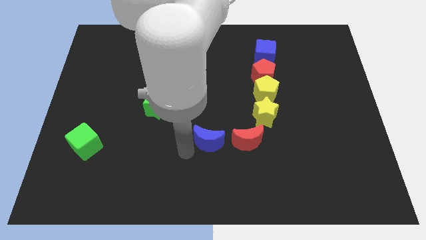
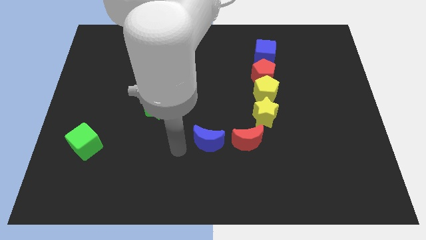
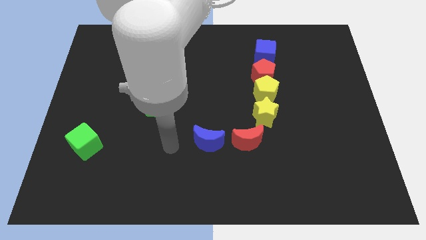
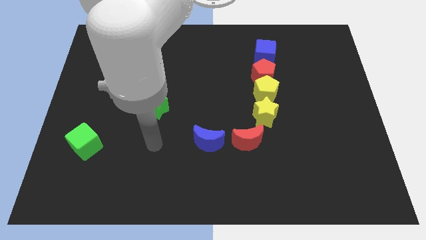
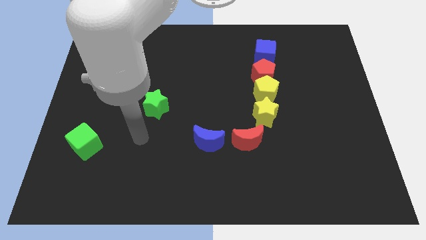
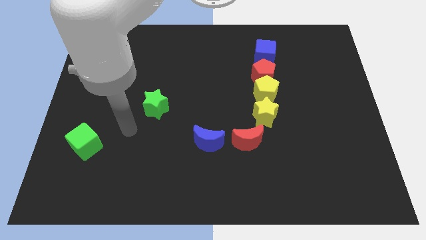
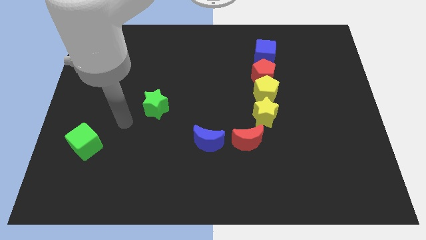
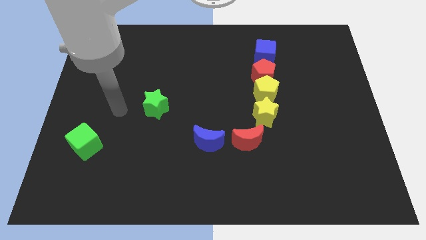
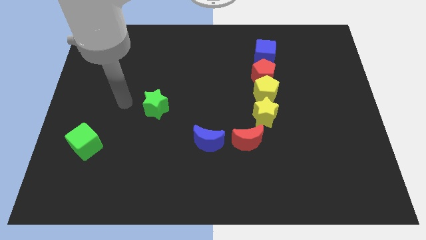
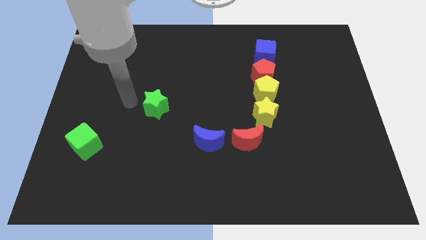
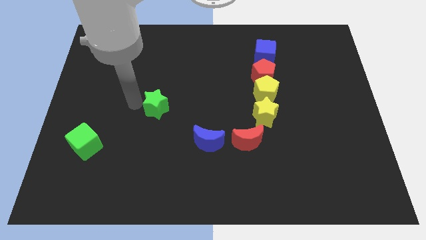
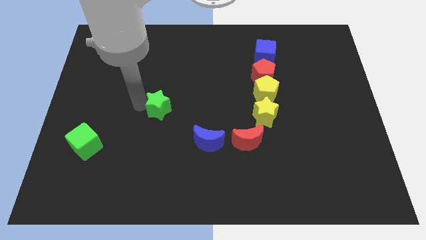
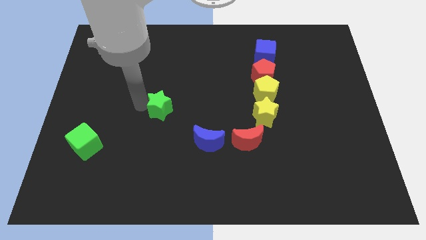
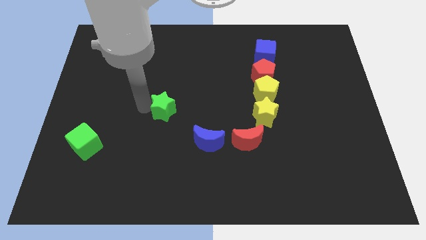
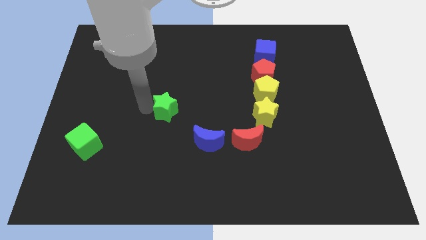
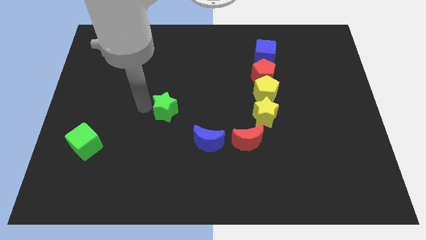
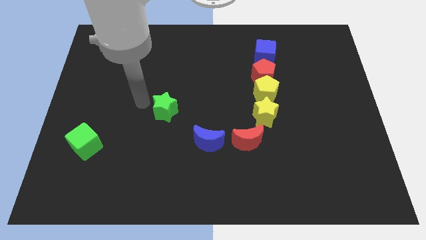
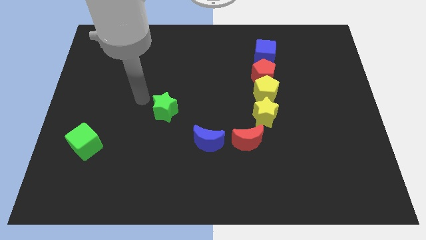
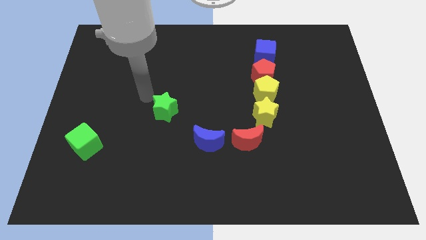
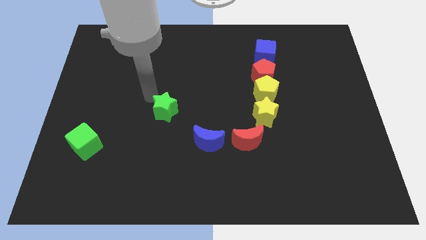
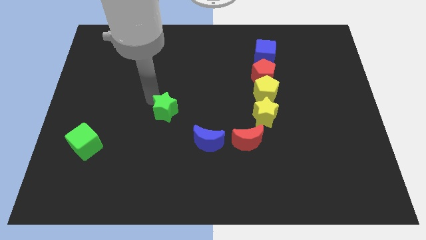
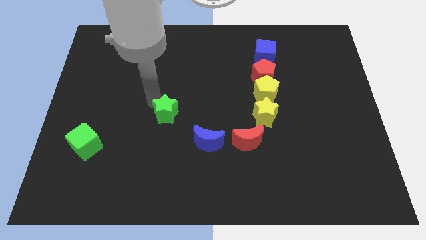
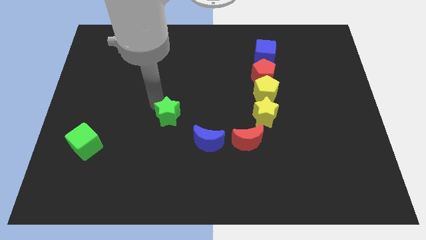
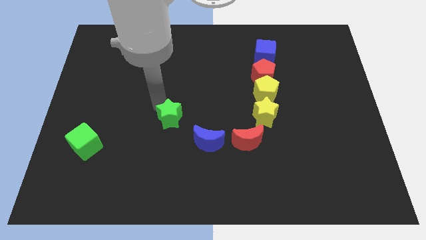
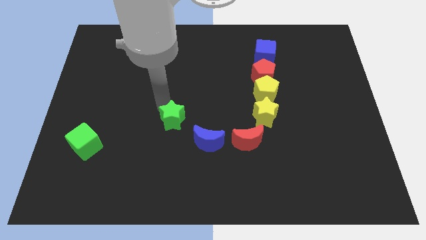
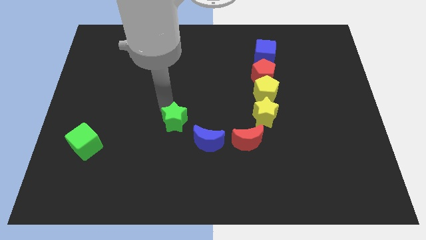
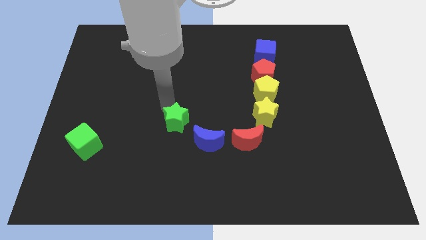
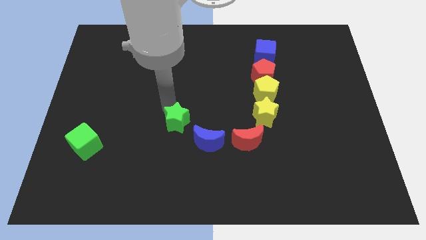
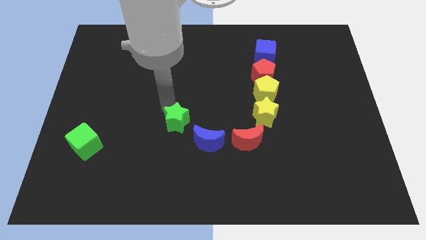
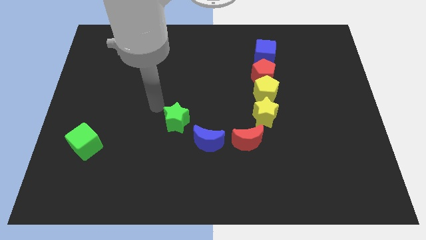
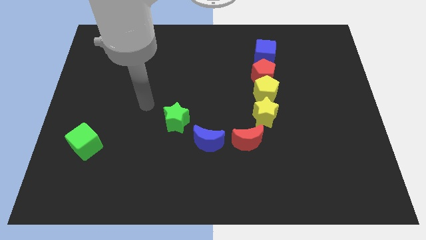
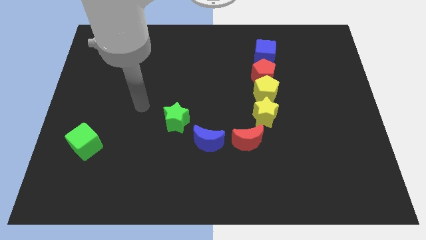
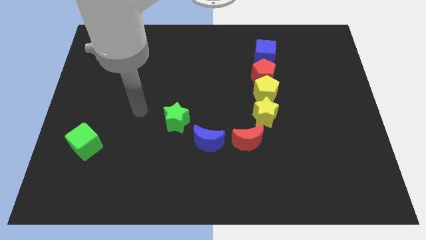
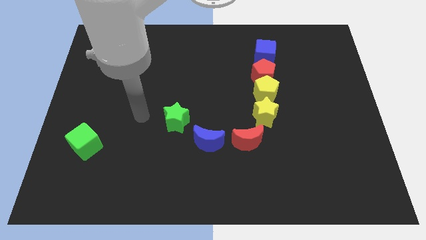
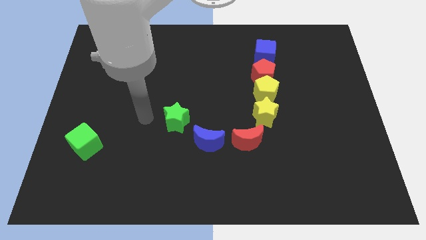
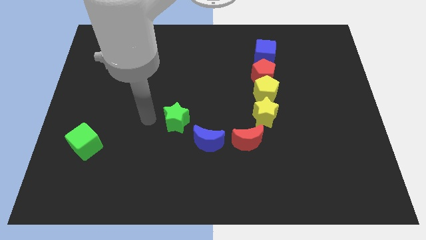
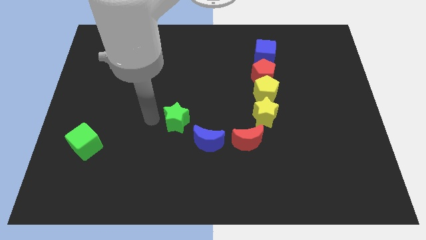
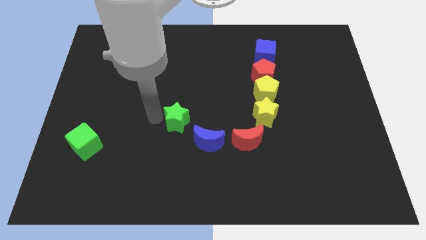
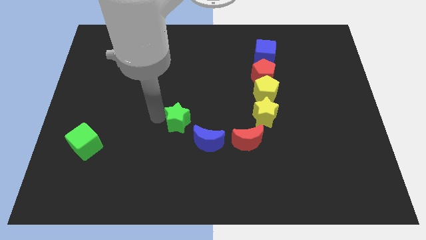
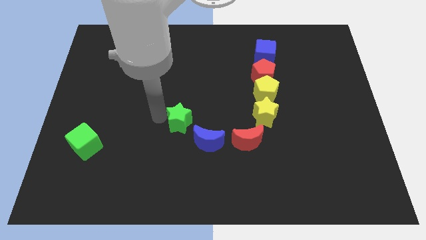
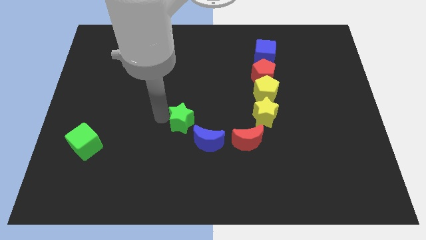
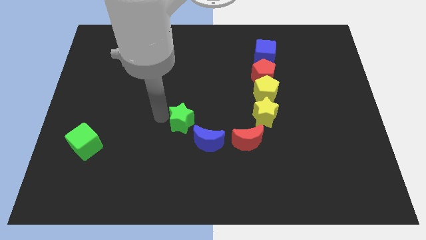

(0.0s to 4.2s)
place the green star beside the blue moon

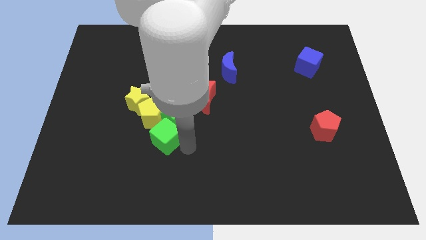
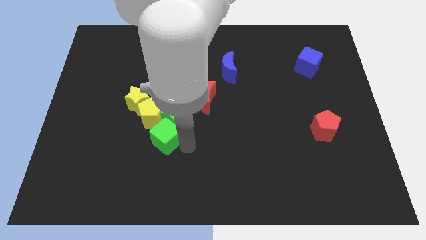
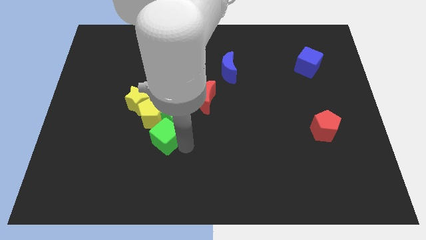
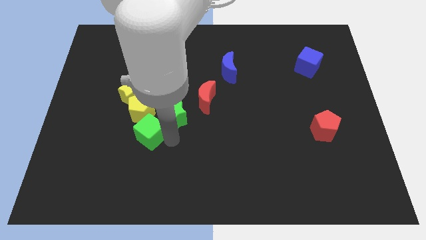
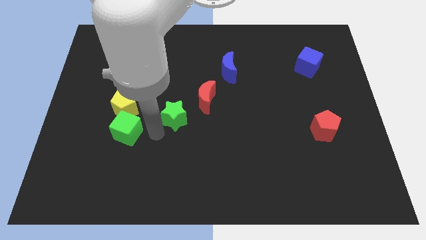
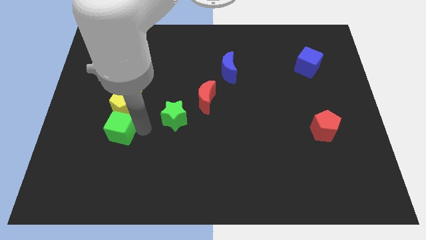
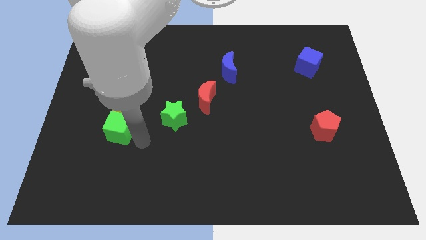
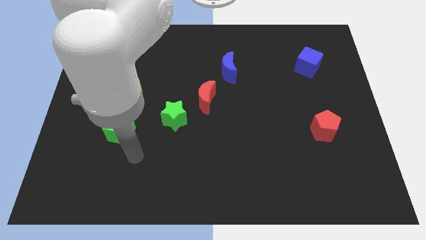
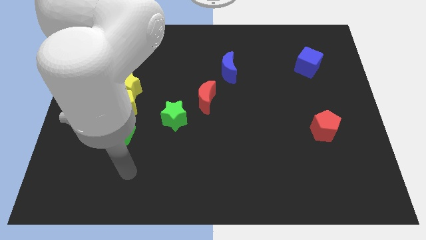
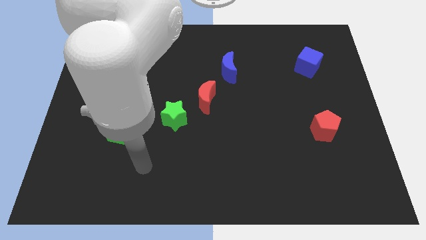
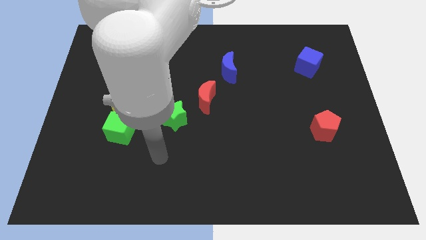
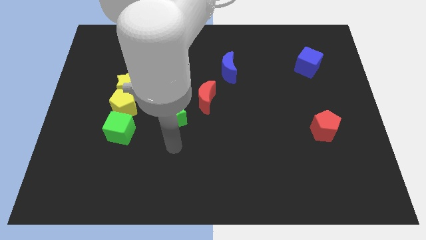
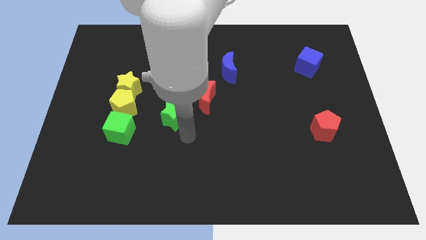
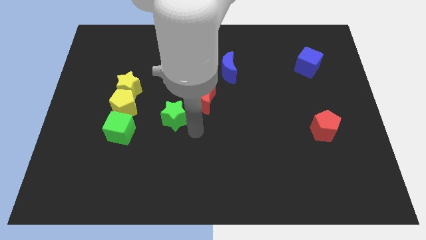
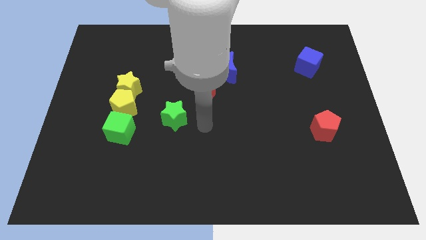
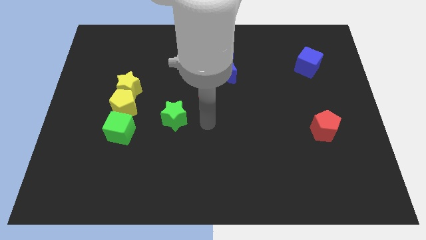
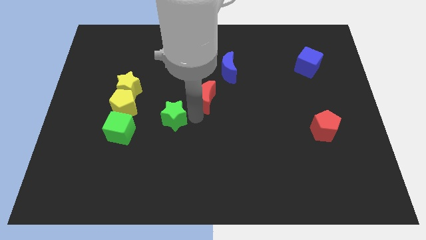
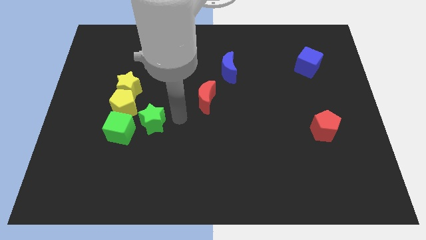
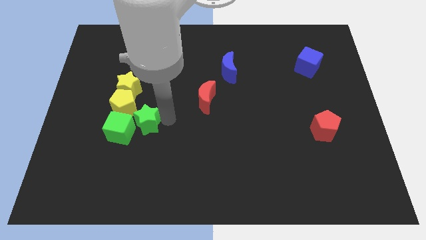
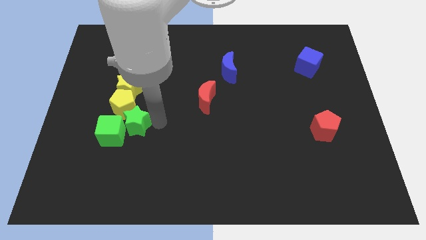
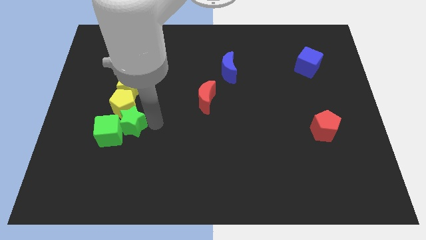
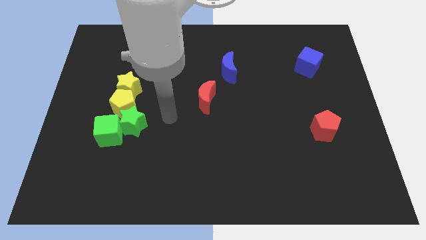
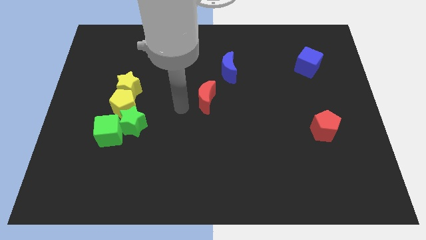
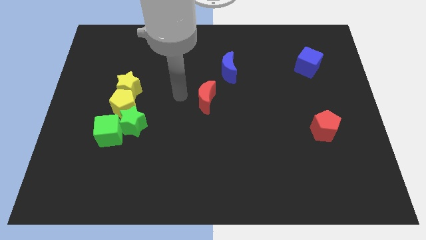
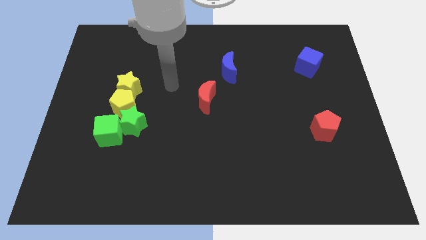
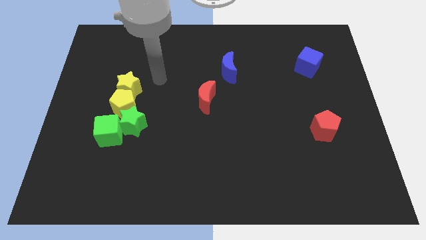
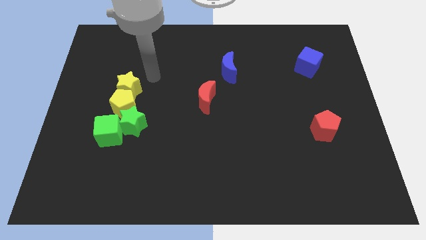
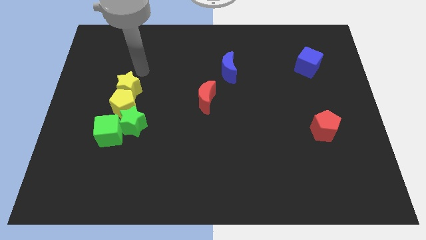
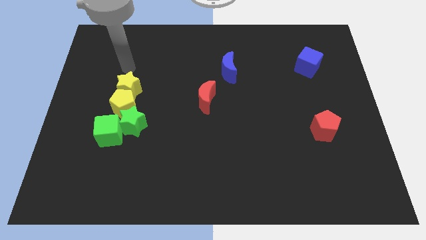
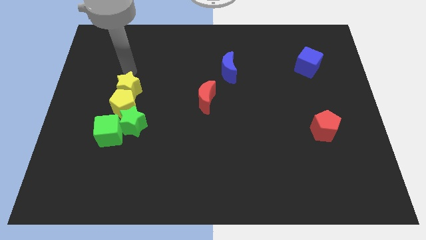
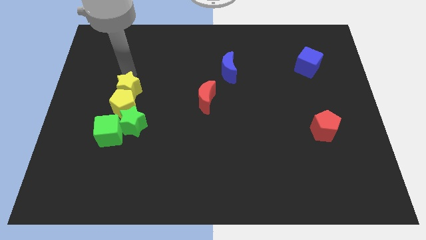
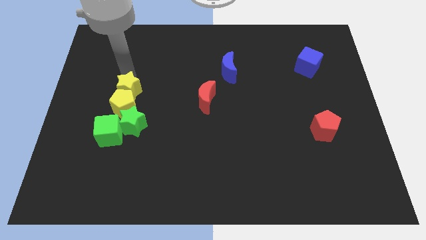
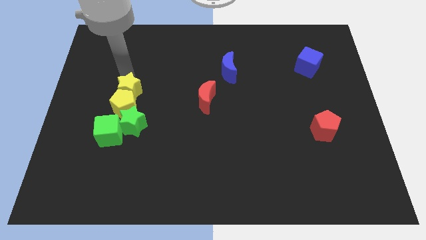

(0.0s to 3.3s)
move the green blocks to the bottom of the yellow blocks

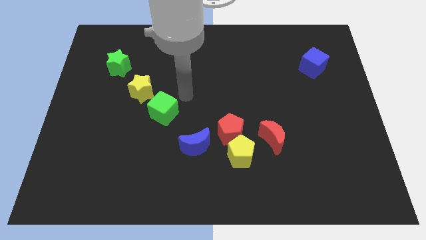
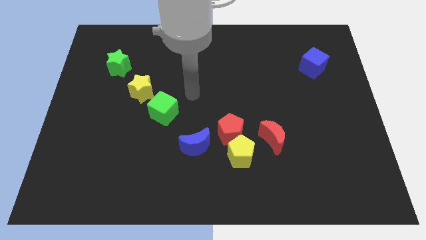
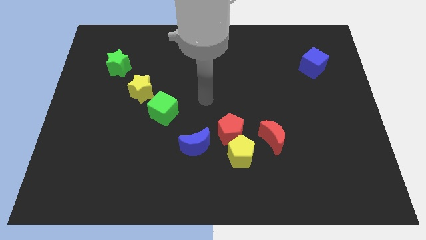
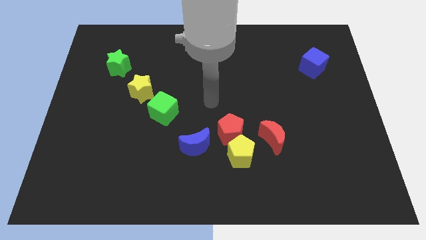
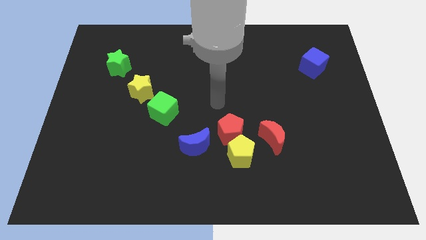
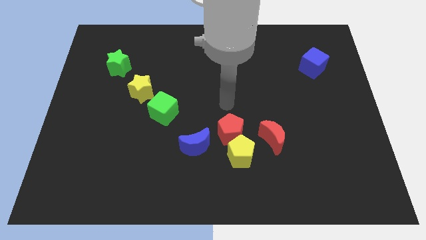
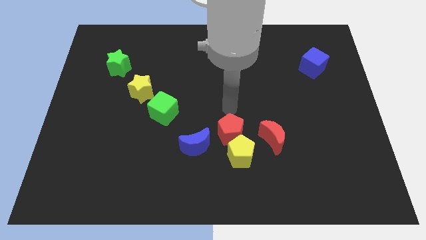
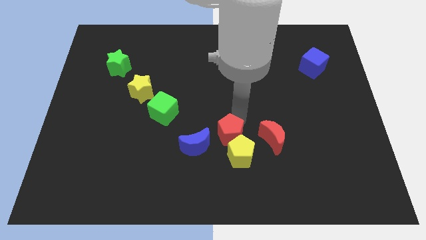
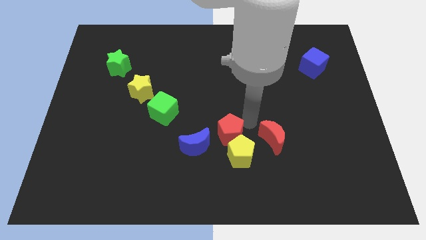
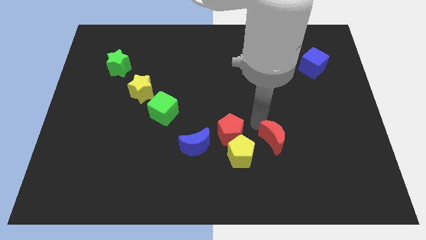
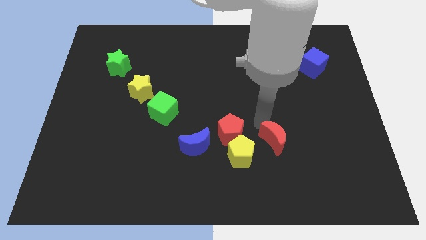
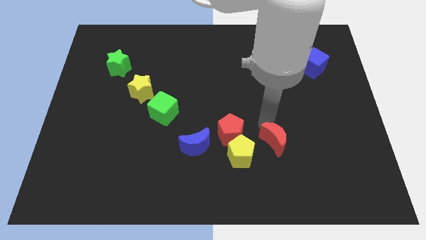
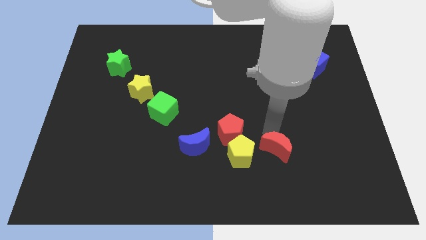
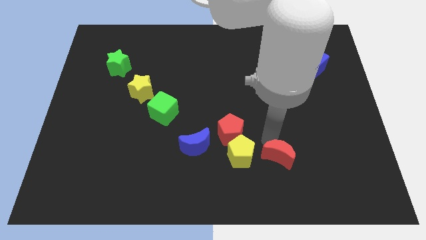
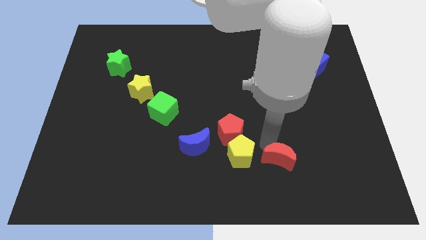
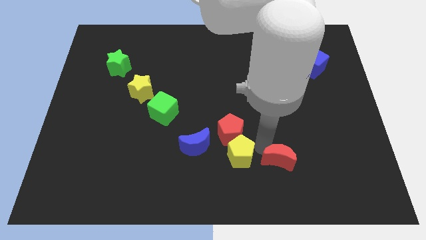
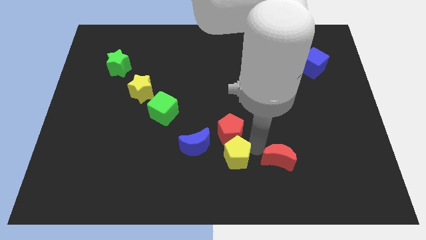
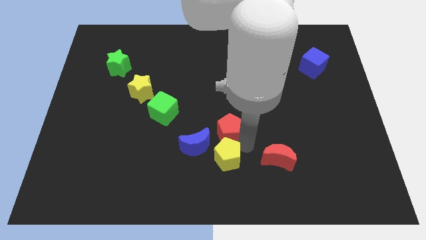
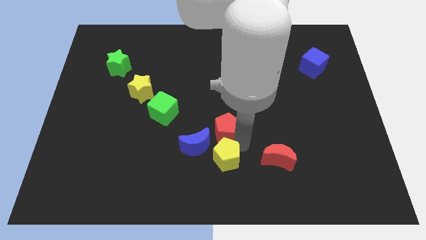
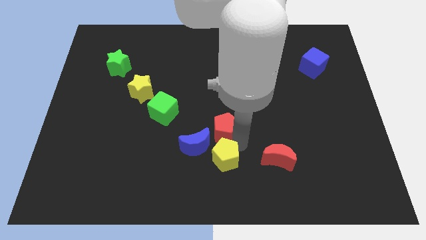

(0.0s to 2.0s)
move the red moon right side of the yellow pentagon
